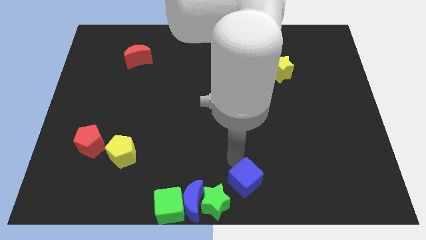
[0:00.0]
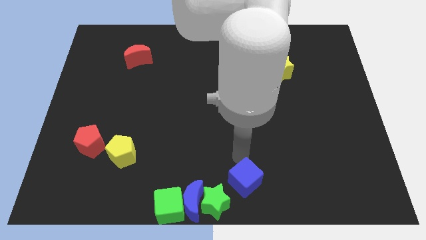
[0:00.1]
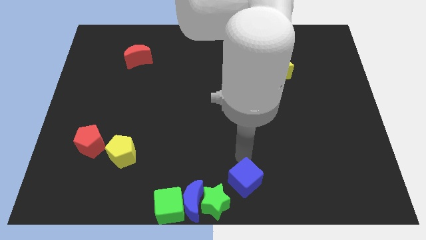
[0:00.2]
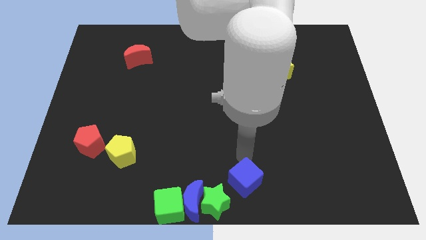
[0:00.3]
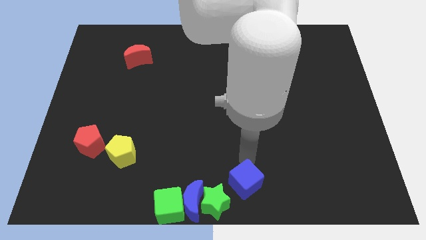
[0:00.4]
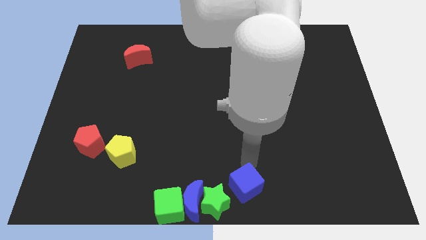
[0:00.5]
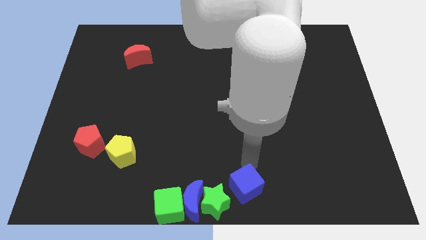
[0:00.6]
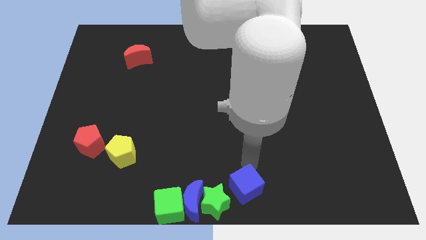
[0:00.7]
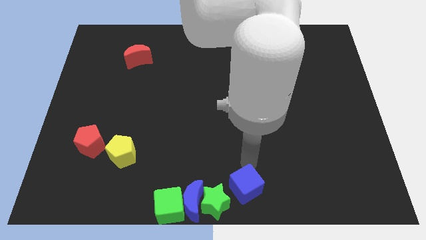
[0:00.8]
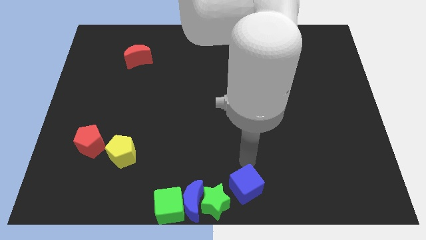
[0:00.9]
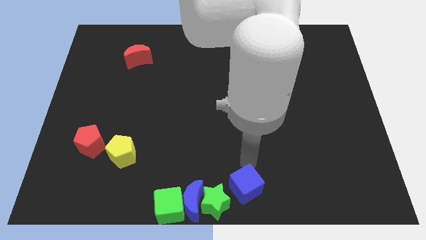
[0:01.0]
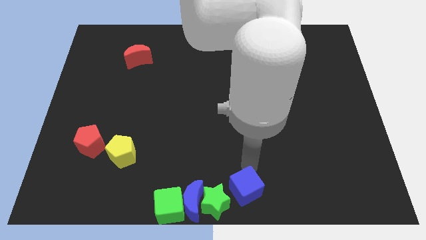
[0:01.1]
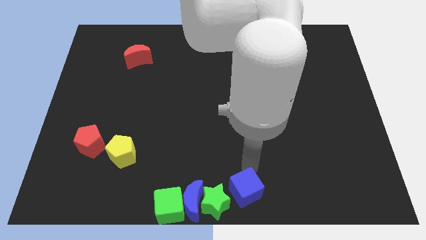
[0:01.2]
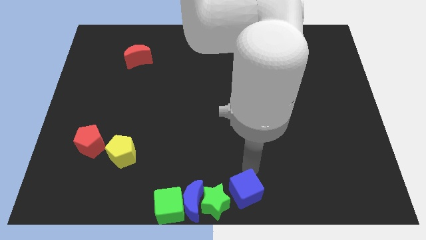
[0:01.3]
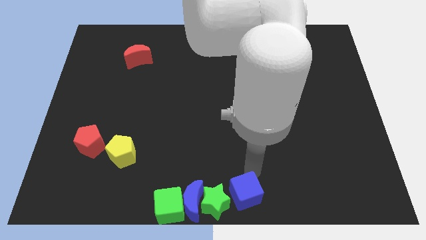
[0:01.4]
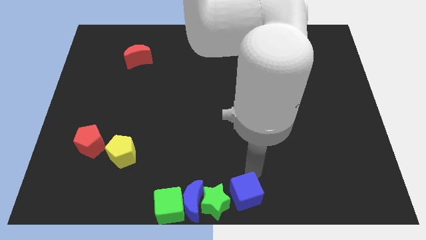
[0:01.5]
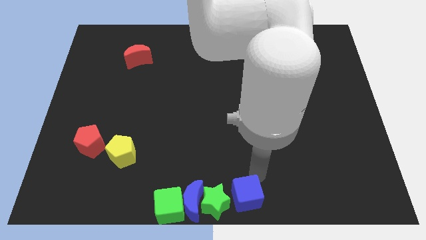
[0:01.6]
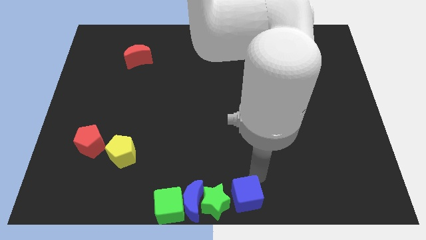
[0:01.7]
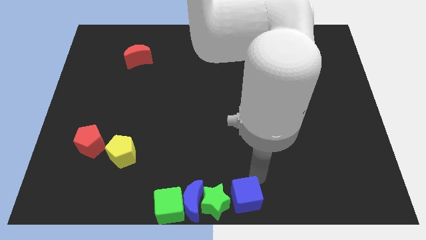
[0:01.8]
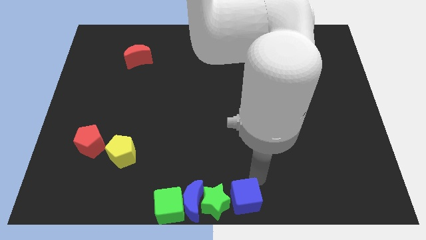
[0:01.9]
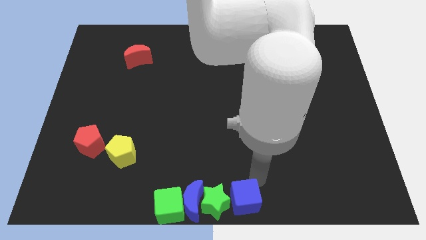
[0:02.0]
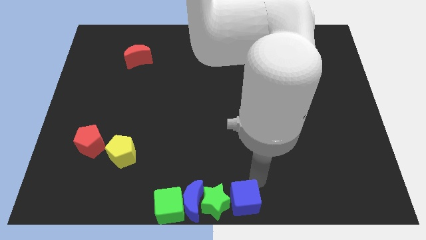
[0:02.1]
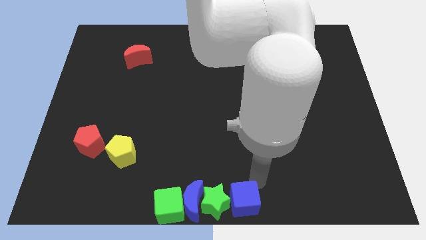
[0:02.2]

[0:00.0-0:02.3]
move the blue cube to the right of the green star

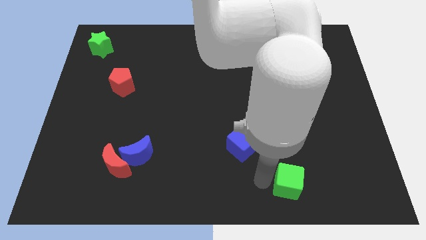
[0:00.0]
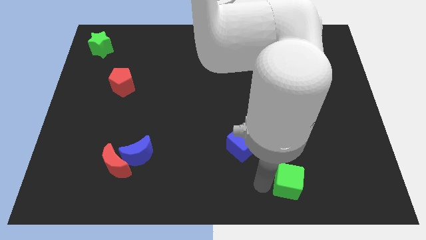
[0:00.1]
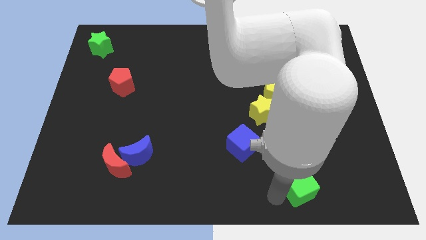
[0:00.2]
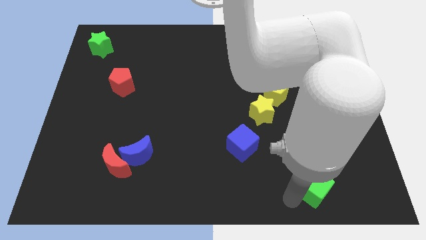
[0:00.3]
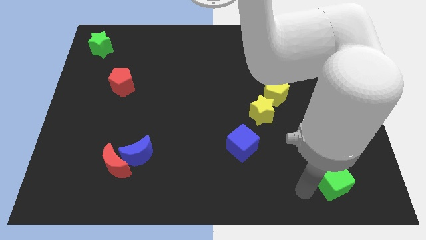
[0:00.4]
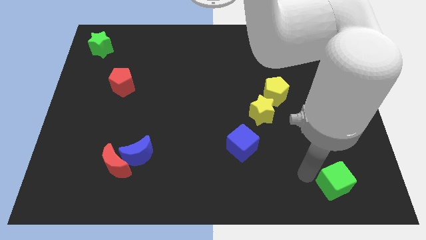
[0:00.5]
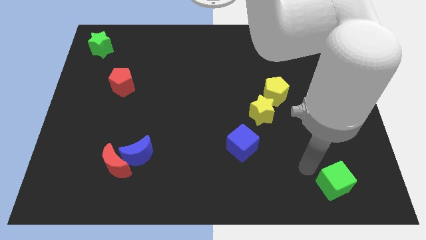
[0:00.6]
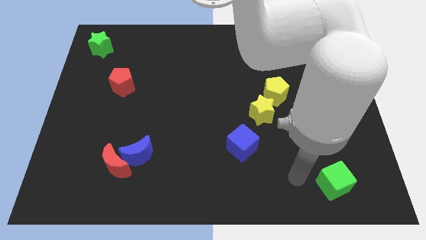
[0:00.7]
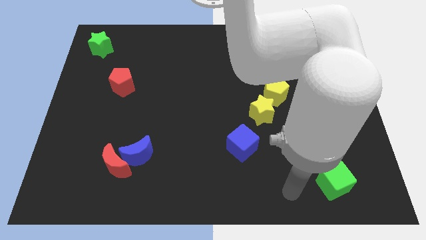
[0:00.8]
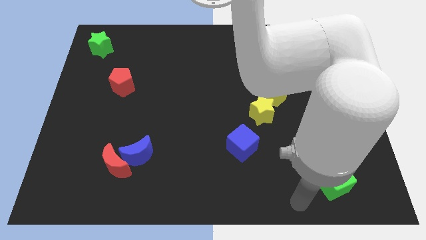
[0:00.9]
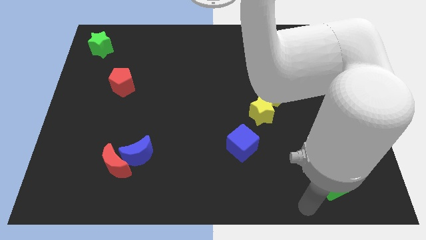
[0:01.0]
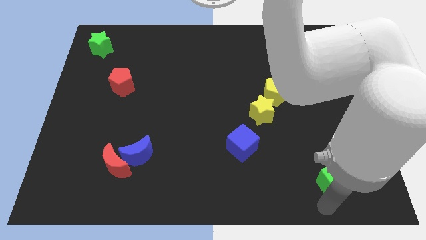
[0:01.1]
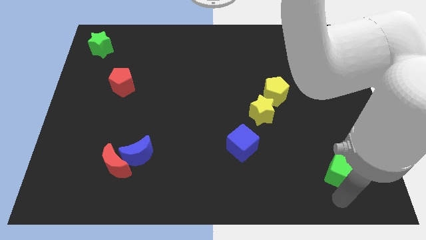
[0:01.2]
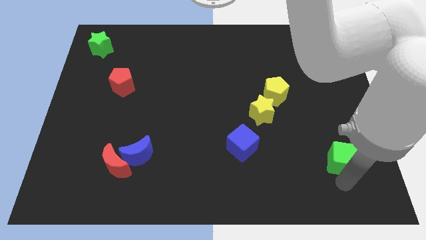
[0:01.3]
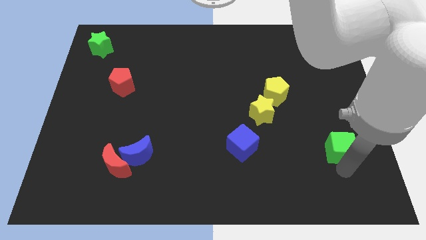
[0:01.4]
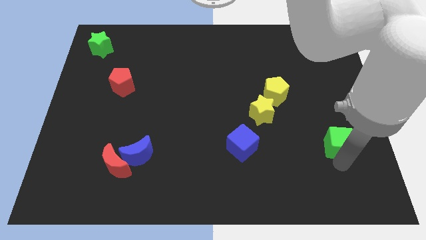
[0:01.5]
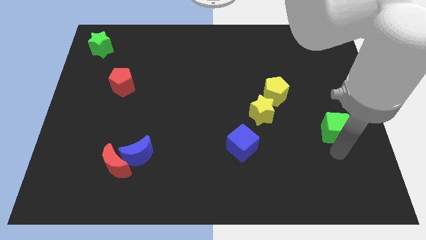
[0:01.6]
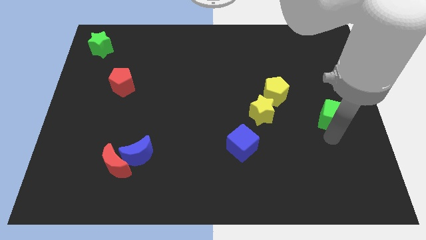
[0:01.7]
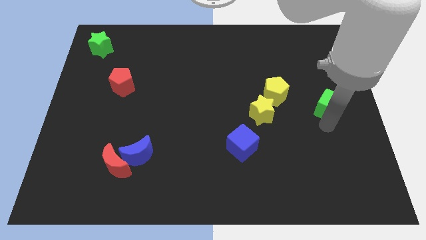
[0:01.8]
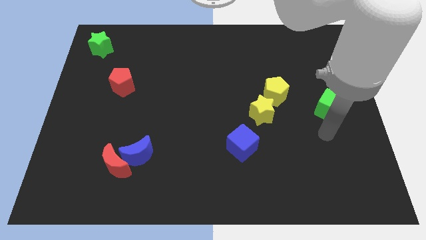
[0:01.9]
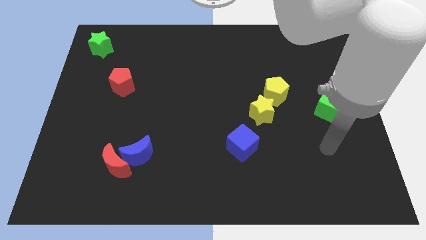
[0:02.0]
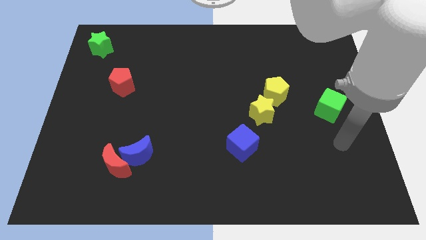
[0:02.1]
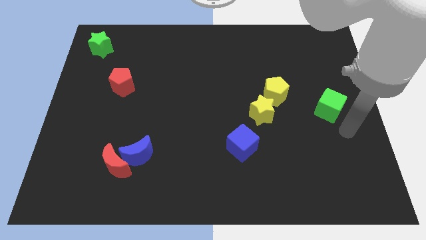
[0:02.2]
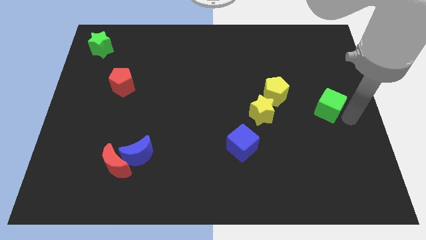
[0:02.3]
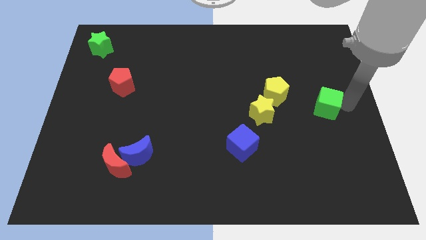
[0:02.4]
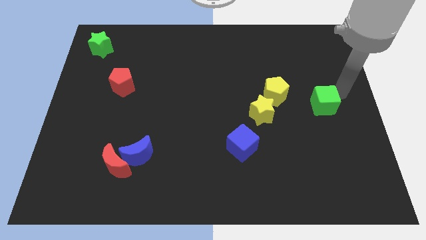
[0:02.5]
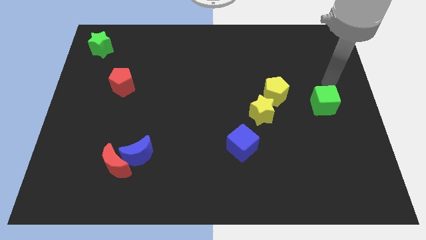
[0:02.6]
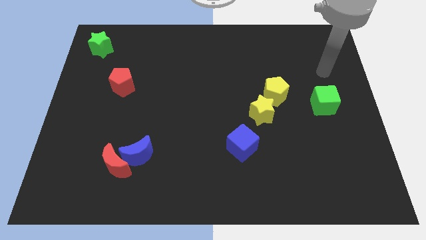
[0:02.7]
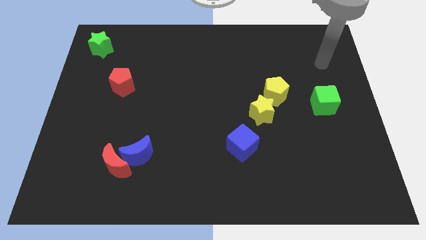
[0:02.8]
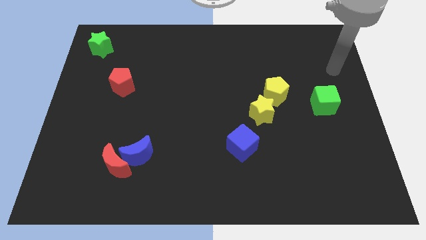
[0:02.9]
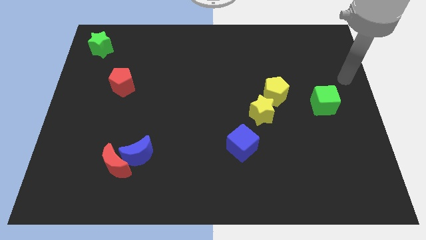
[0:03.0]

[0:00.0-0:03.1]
place the green cube to the right side of yellow pentagon

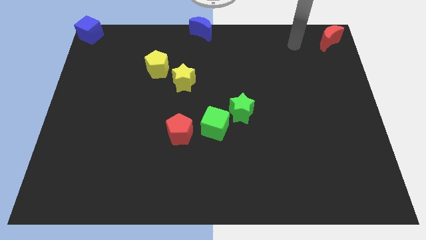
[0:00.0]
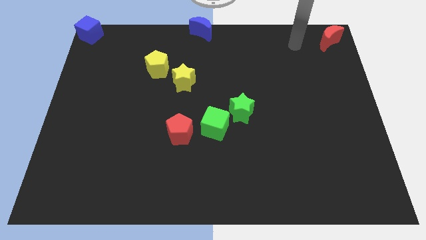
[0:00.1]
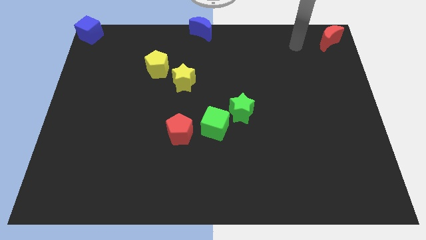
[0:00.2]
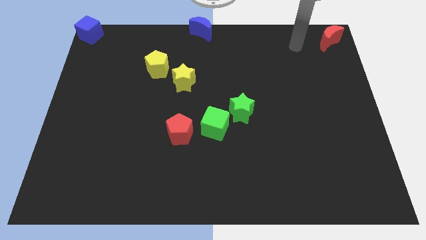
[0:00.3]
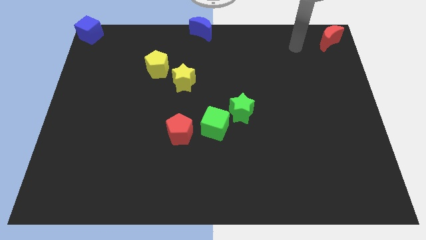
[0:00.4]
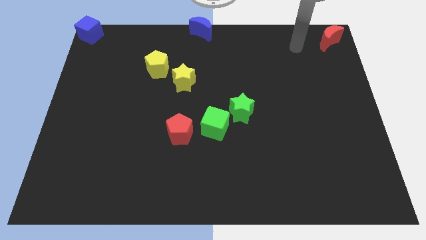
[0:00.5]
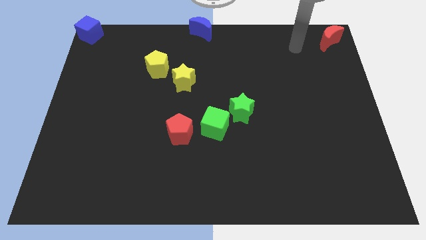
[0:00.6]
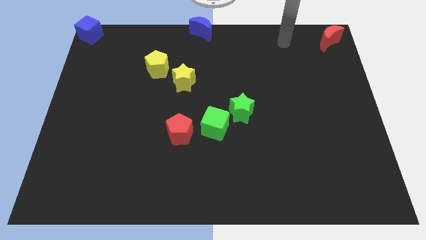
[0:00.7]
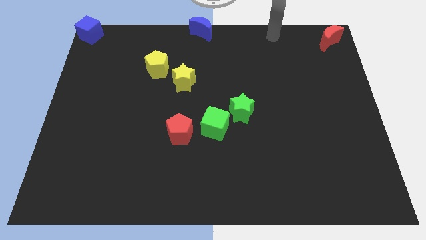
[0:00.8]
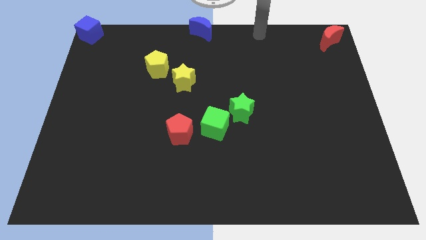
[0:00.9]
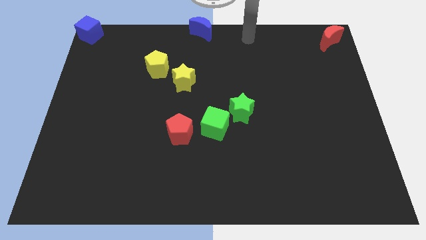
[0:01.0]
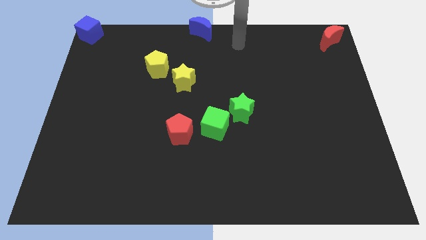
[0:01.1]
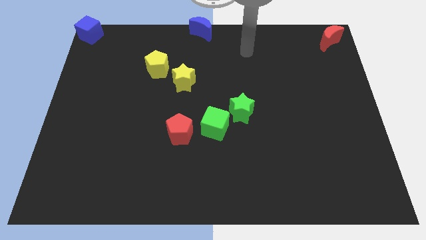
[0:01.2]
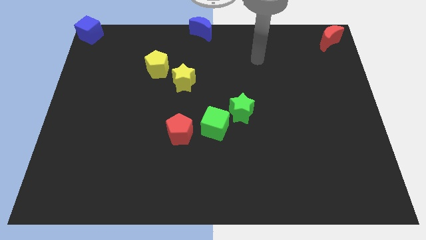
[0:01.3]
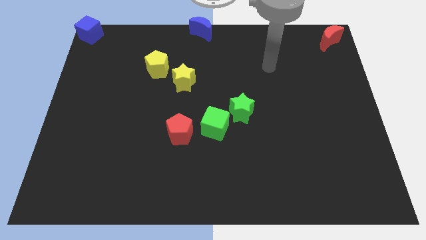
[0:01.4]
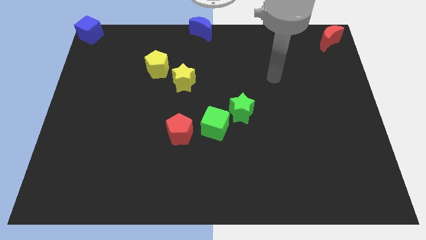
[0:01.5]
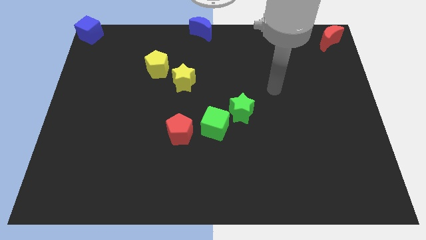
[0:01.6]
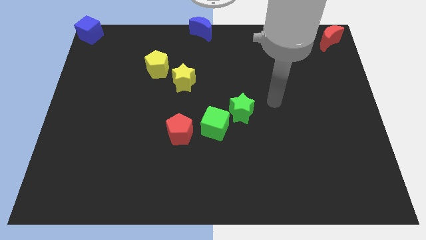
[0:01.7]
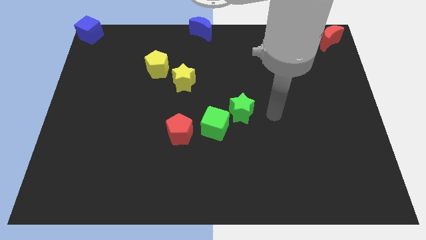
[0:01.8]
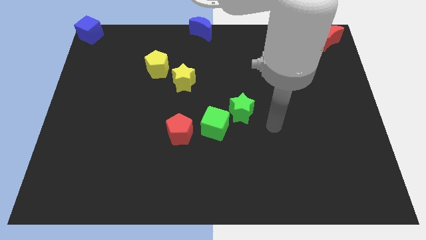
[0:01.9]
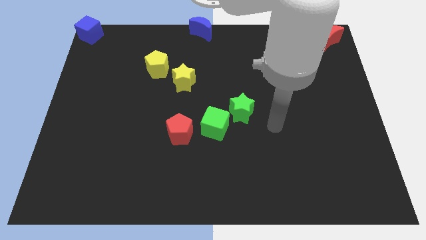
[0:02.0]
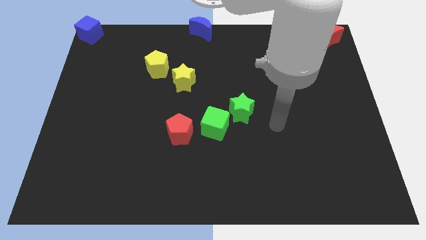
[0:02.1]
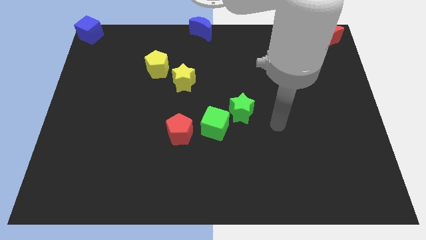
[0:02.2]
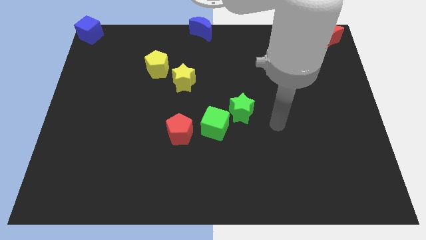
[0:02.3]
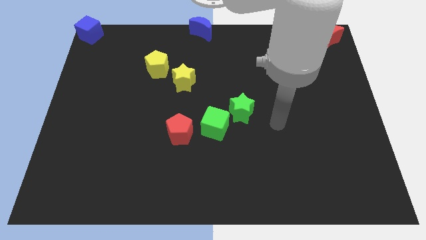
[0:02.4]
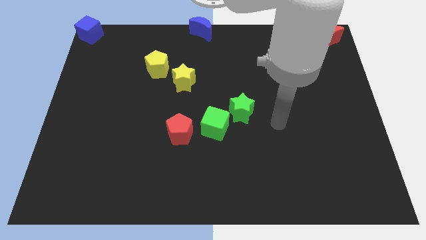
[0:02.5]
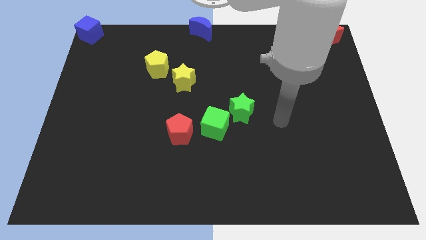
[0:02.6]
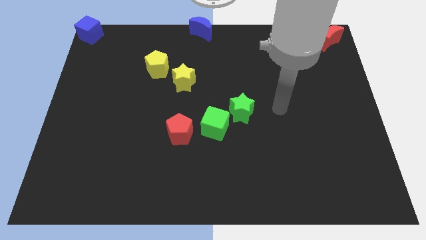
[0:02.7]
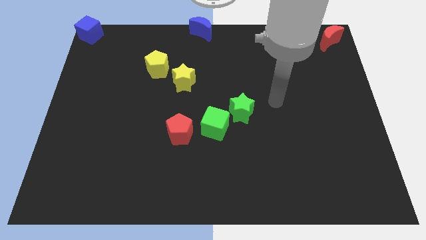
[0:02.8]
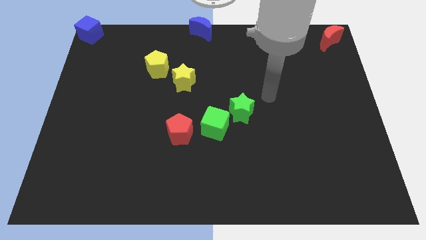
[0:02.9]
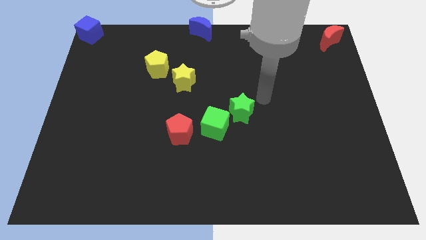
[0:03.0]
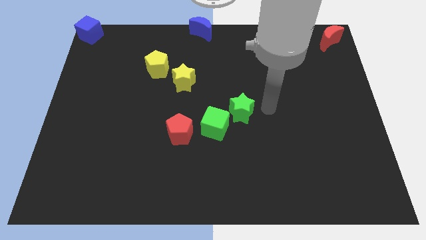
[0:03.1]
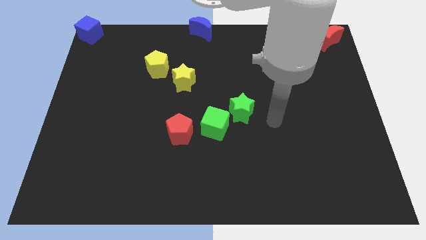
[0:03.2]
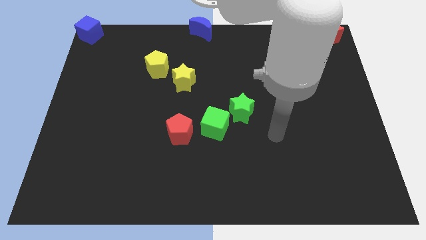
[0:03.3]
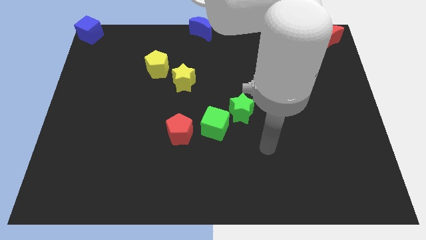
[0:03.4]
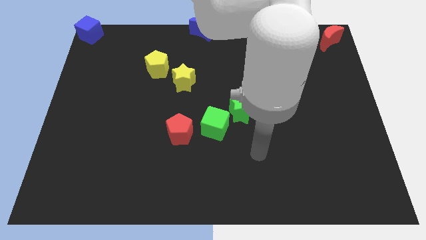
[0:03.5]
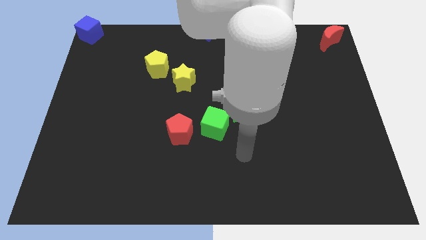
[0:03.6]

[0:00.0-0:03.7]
move your arm away from the red moon
